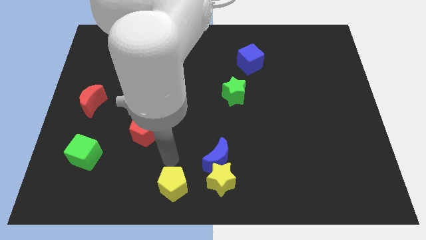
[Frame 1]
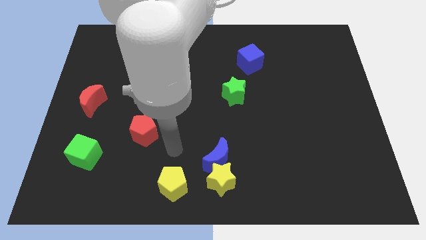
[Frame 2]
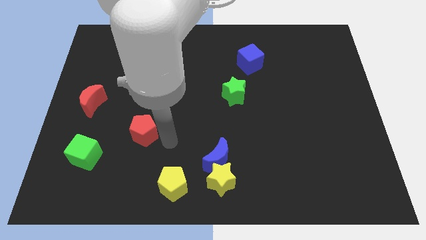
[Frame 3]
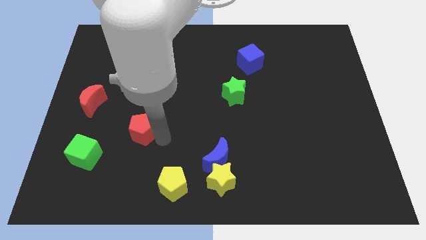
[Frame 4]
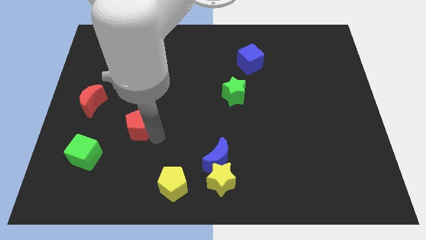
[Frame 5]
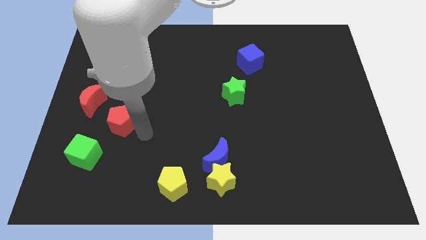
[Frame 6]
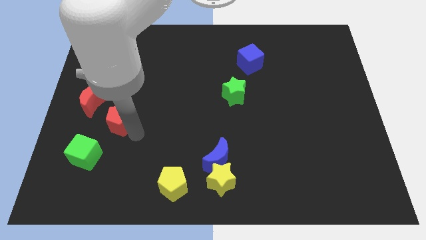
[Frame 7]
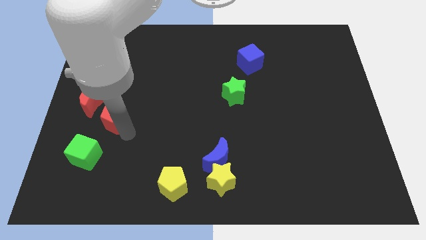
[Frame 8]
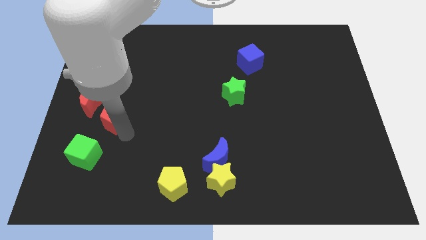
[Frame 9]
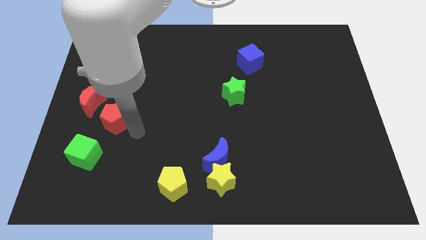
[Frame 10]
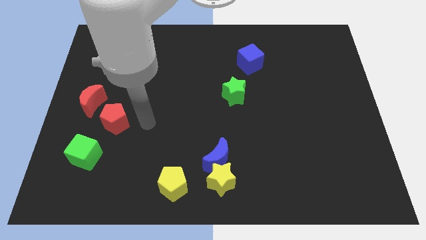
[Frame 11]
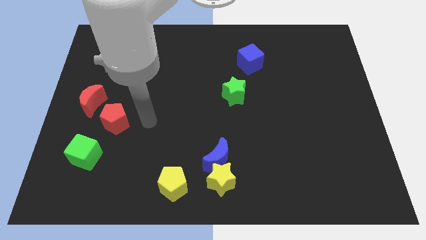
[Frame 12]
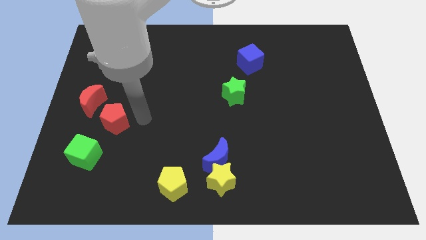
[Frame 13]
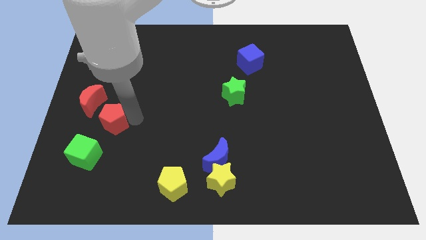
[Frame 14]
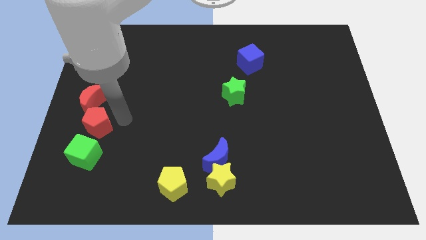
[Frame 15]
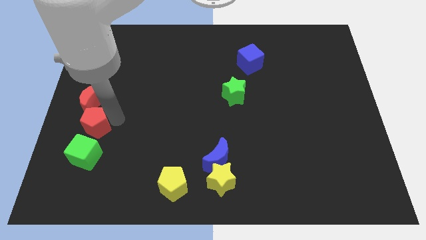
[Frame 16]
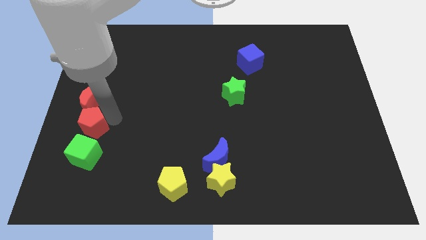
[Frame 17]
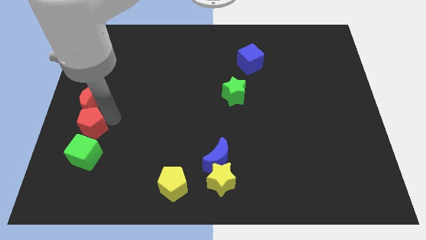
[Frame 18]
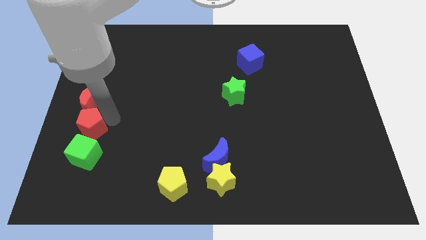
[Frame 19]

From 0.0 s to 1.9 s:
place the red pentagon in between red moon and green cube

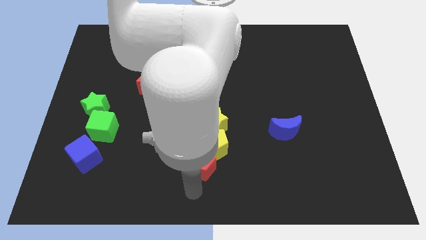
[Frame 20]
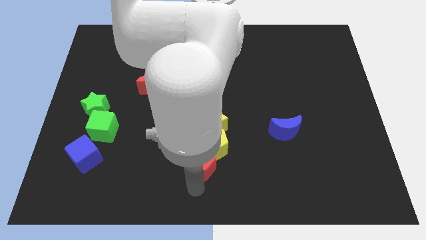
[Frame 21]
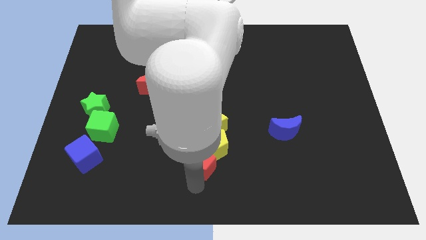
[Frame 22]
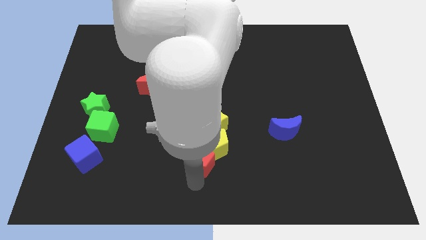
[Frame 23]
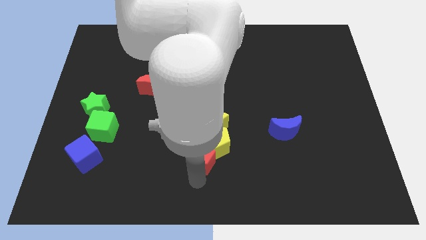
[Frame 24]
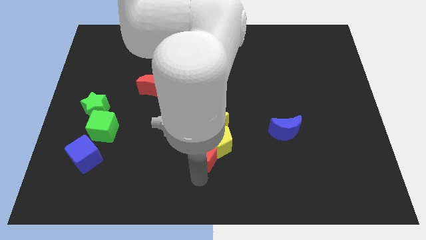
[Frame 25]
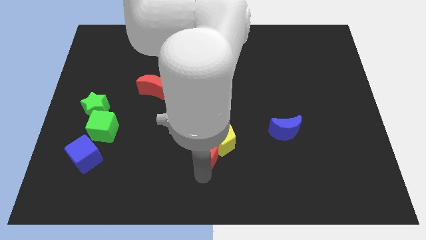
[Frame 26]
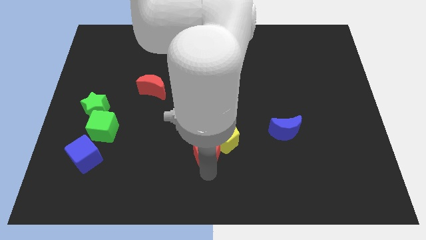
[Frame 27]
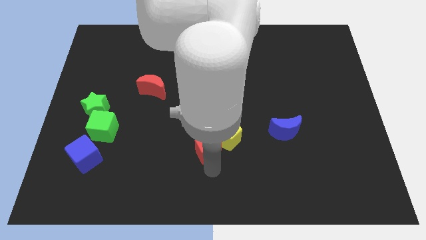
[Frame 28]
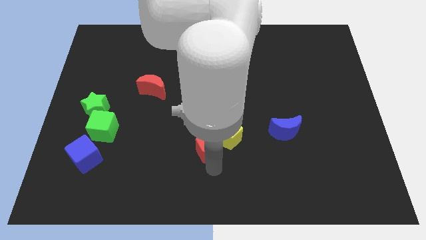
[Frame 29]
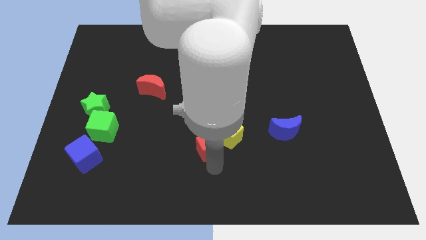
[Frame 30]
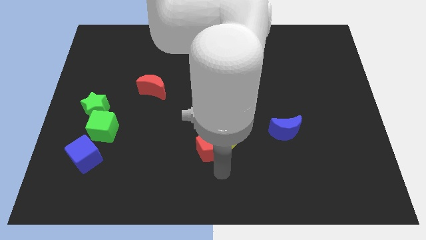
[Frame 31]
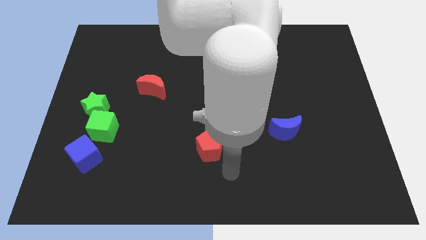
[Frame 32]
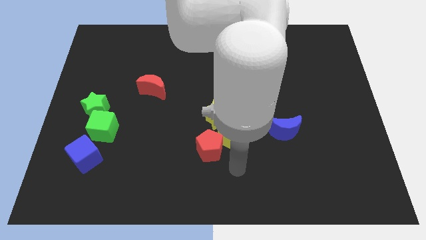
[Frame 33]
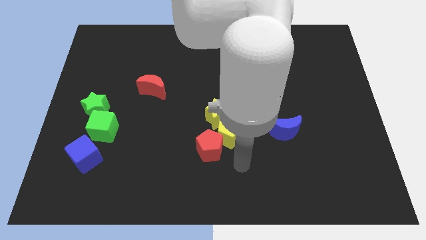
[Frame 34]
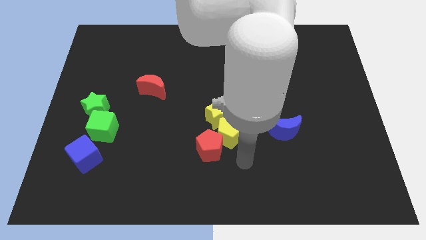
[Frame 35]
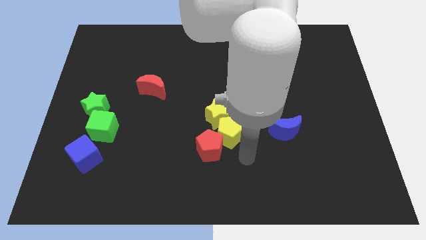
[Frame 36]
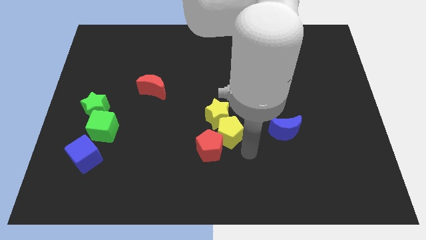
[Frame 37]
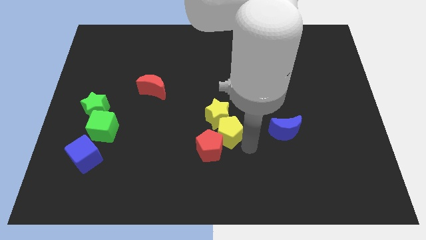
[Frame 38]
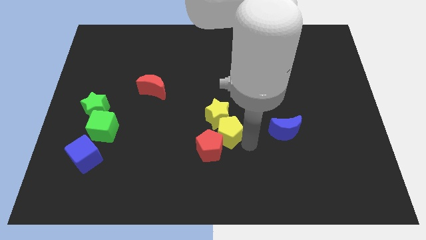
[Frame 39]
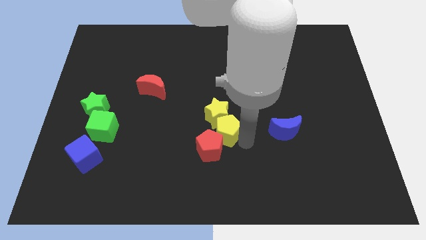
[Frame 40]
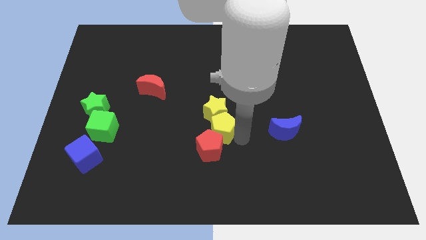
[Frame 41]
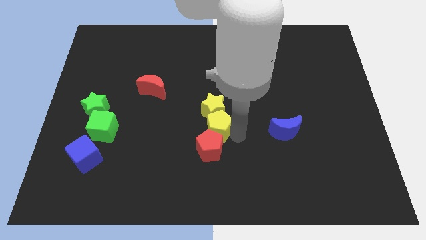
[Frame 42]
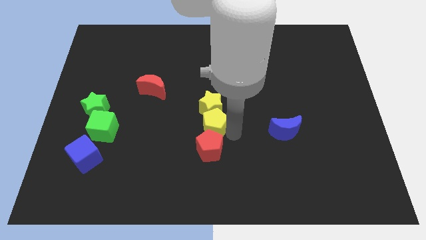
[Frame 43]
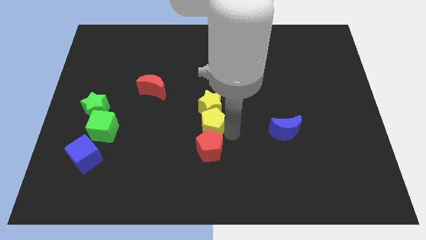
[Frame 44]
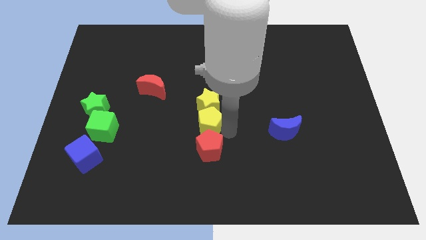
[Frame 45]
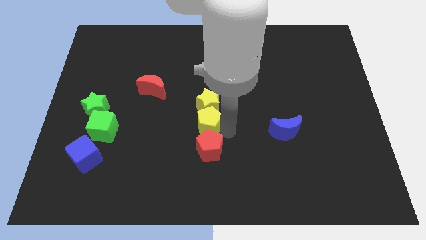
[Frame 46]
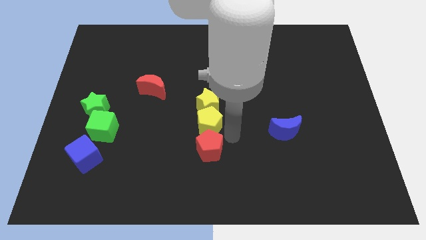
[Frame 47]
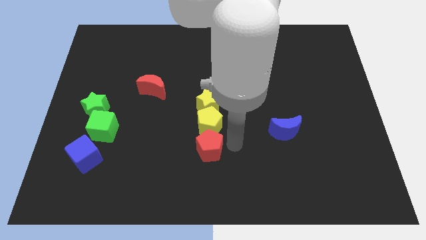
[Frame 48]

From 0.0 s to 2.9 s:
arrange the yellow blocks in a vertical line above the red pentagon

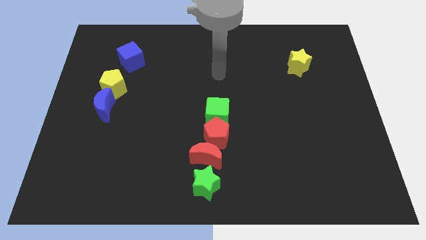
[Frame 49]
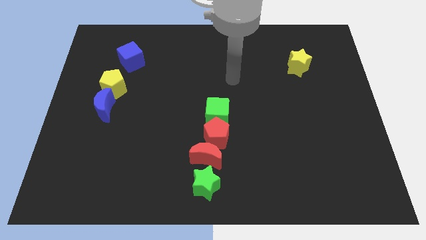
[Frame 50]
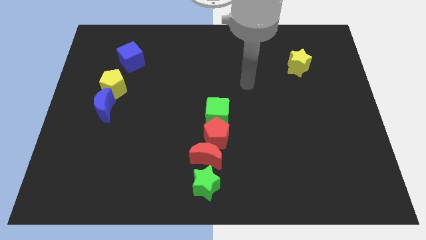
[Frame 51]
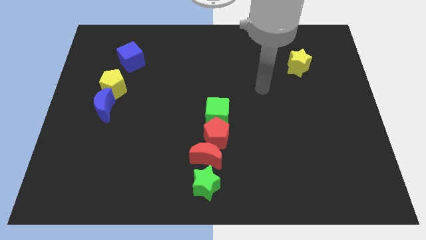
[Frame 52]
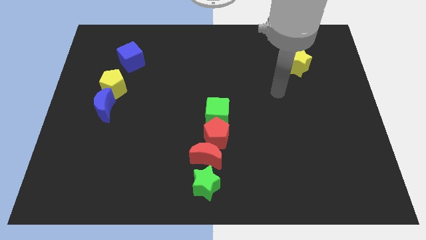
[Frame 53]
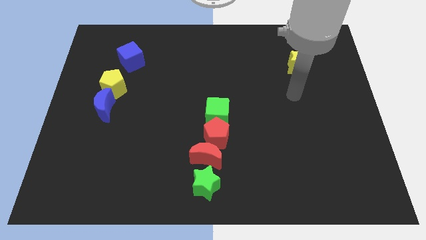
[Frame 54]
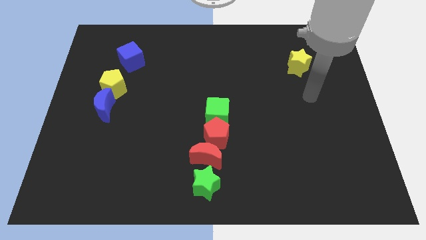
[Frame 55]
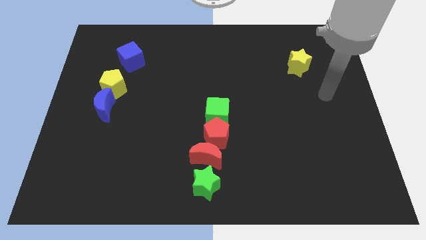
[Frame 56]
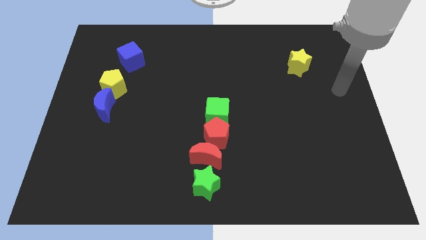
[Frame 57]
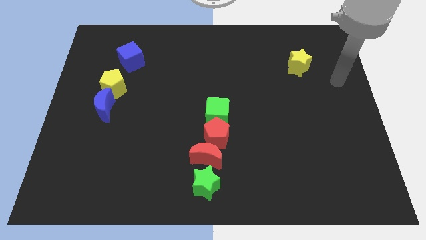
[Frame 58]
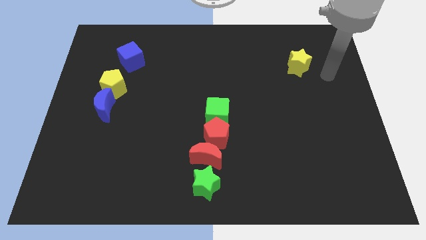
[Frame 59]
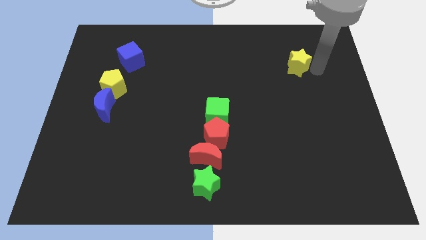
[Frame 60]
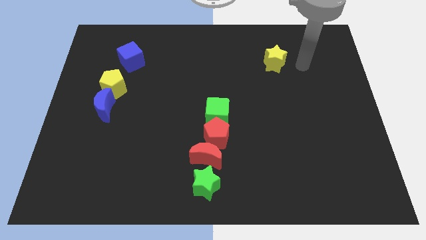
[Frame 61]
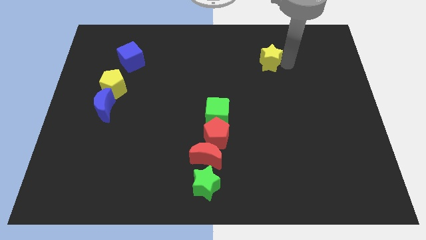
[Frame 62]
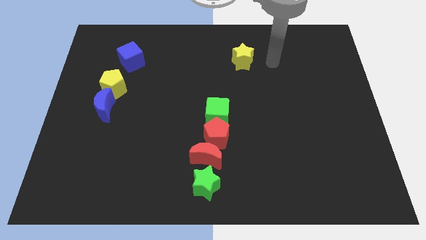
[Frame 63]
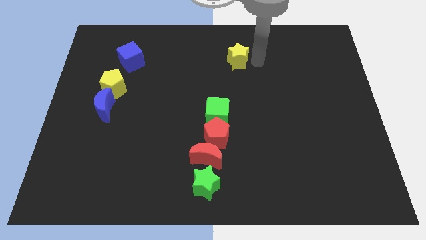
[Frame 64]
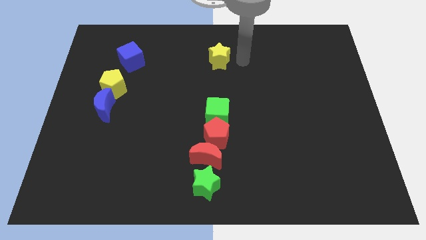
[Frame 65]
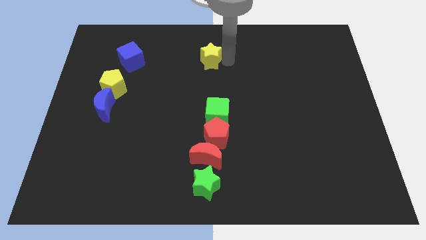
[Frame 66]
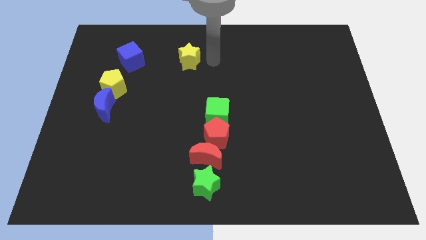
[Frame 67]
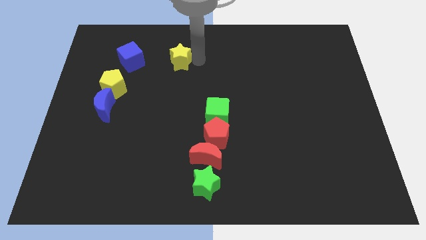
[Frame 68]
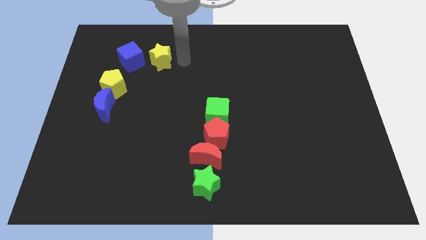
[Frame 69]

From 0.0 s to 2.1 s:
move the yellow star towards blue cube

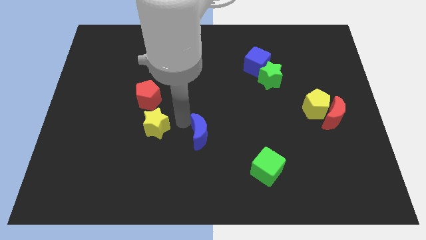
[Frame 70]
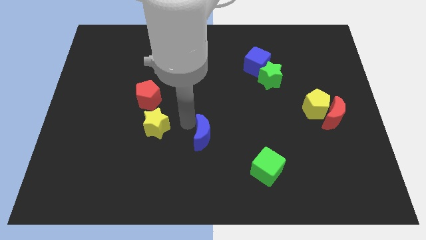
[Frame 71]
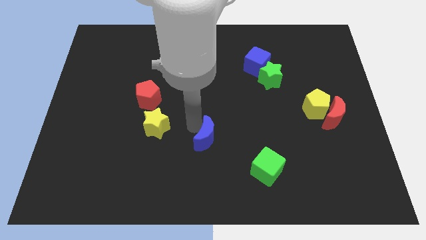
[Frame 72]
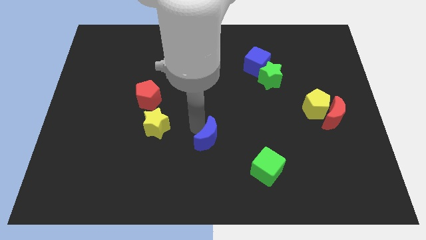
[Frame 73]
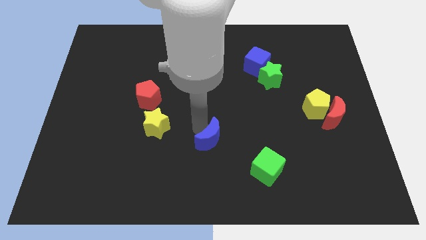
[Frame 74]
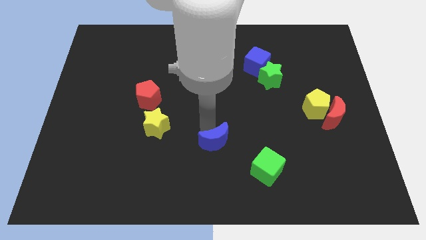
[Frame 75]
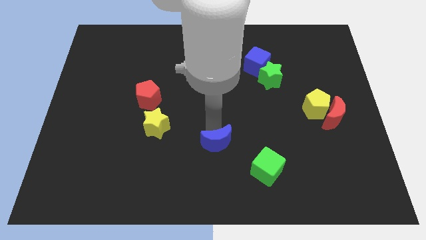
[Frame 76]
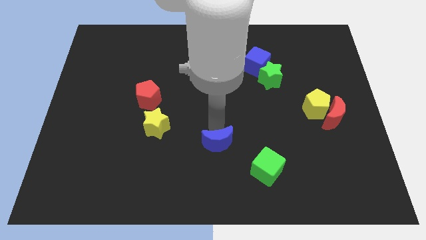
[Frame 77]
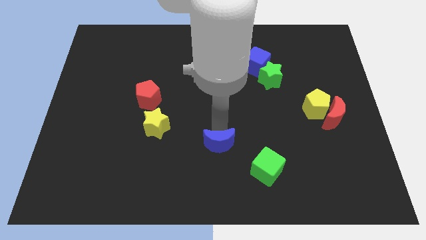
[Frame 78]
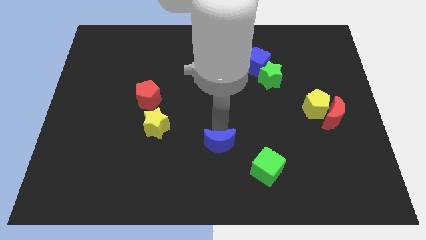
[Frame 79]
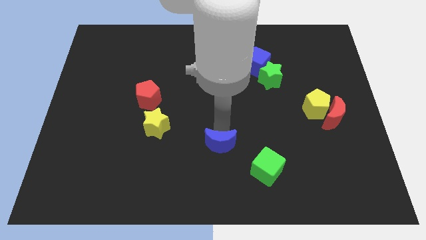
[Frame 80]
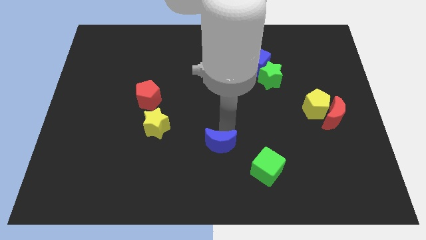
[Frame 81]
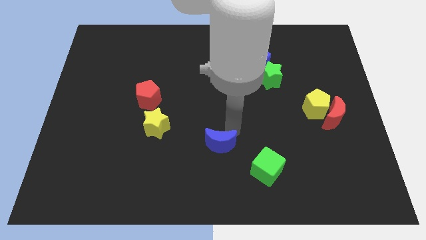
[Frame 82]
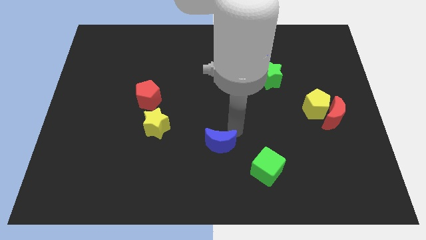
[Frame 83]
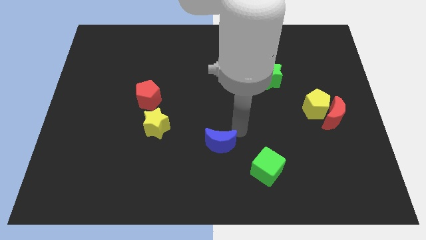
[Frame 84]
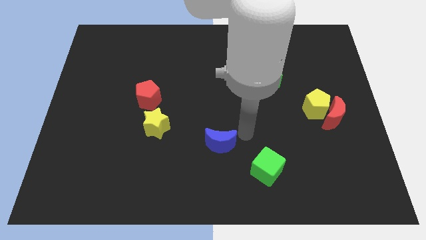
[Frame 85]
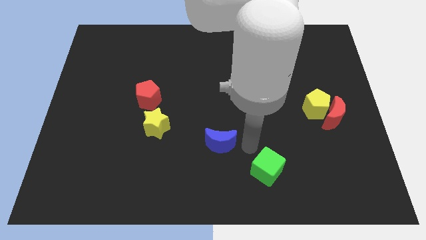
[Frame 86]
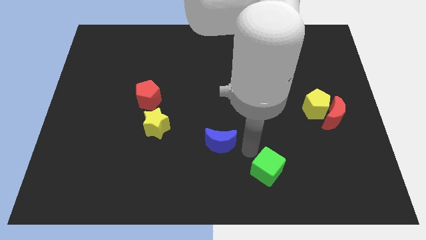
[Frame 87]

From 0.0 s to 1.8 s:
place the blue crescent diagonally in between the green cube and yellow star

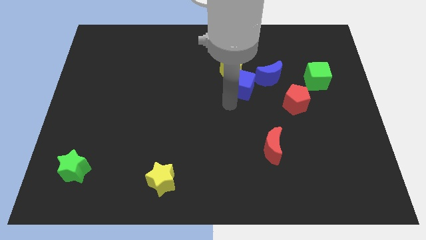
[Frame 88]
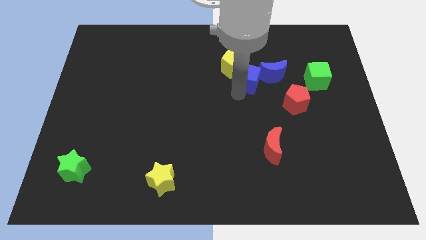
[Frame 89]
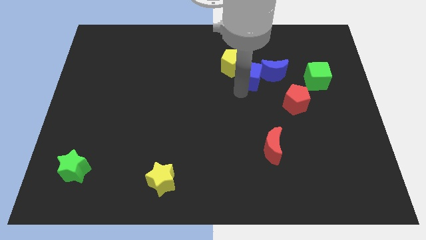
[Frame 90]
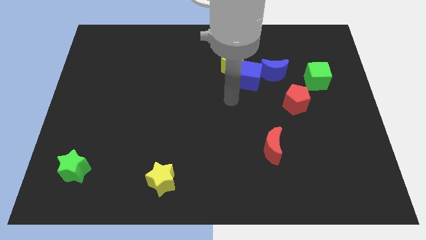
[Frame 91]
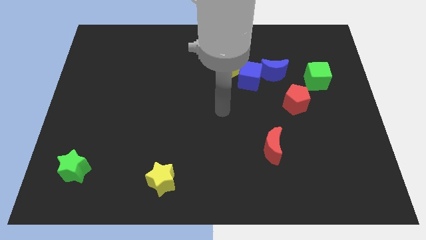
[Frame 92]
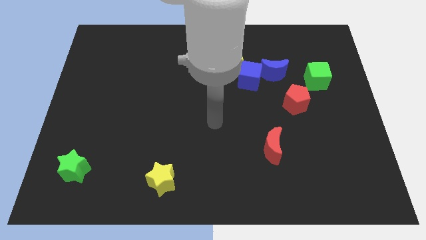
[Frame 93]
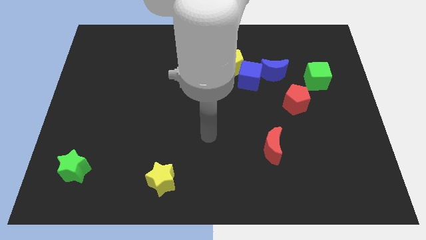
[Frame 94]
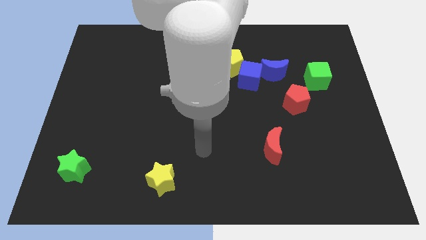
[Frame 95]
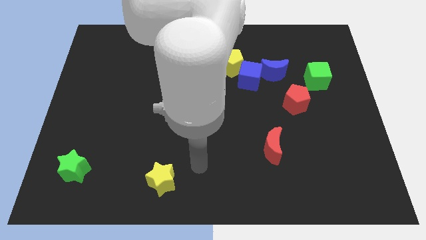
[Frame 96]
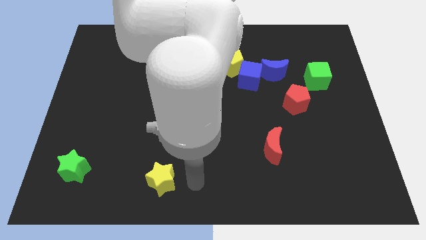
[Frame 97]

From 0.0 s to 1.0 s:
push the blue cube into the blue moon
